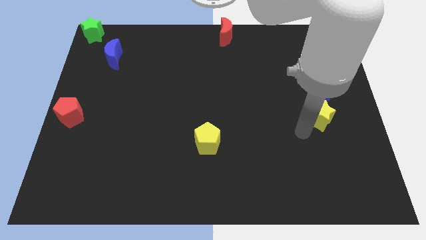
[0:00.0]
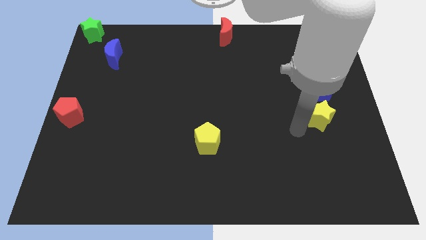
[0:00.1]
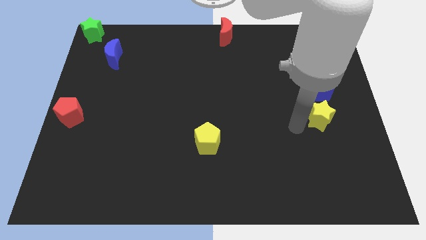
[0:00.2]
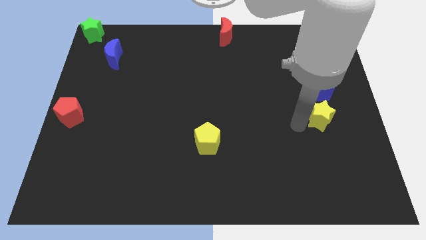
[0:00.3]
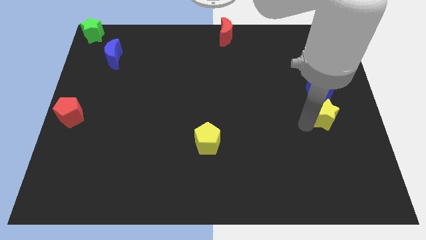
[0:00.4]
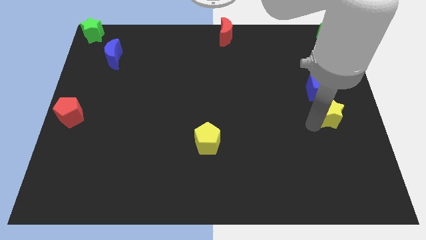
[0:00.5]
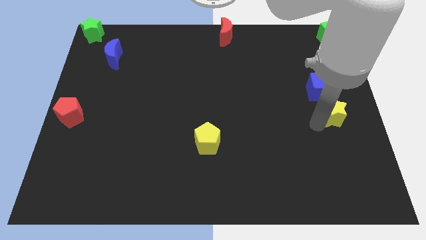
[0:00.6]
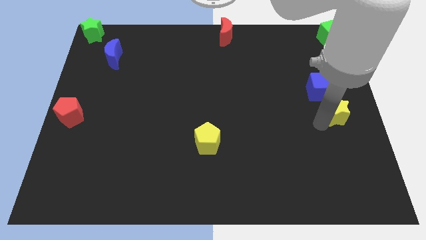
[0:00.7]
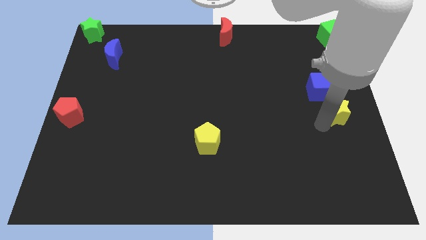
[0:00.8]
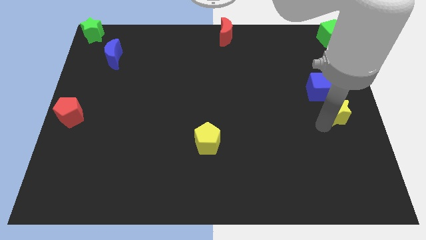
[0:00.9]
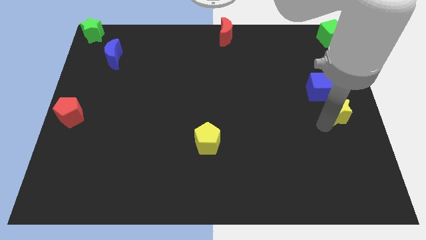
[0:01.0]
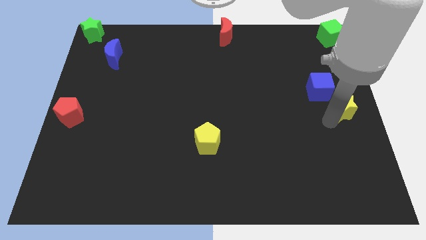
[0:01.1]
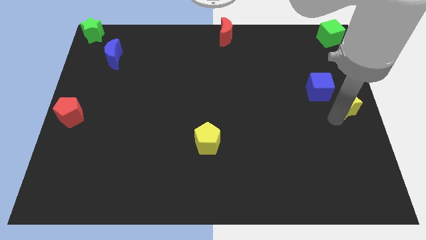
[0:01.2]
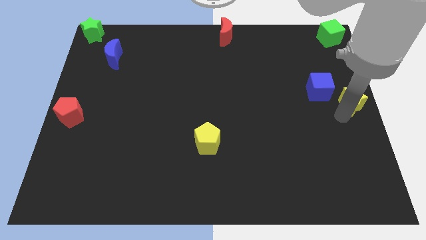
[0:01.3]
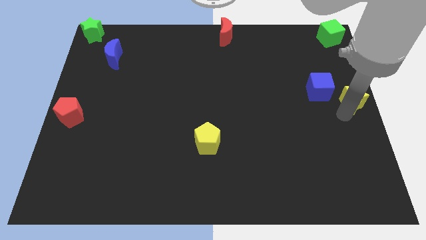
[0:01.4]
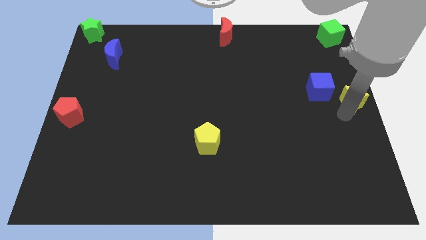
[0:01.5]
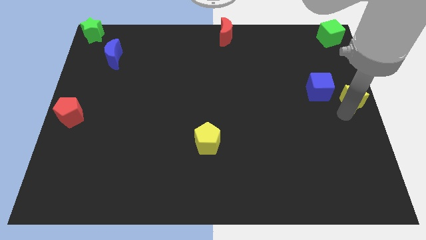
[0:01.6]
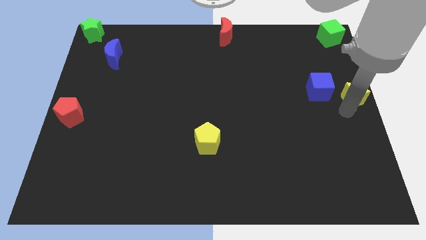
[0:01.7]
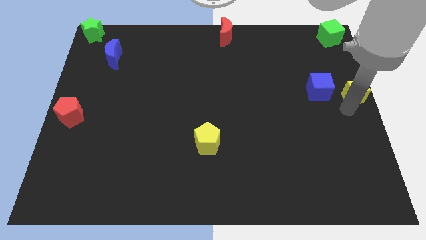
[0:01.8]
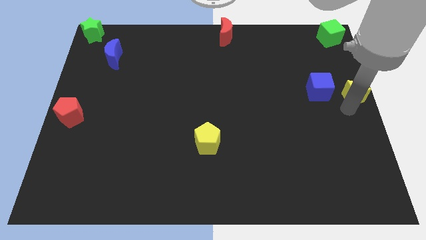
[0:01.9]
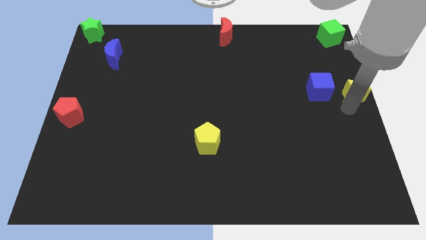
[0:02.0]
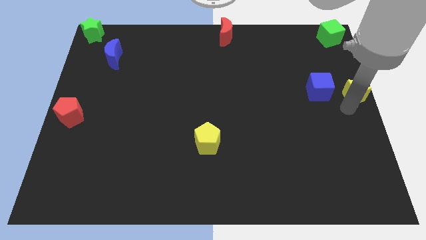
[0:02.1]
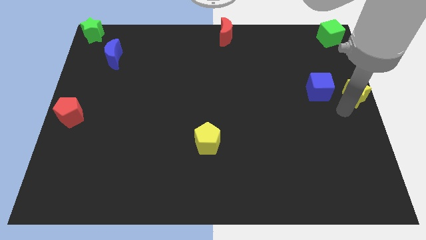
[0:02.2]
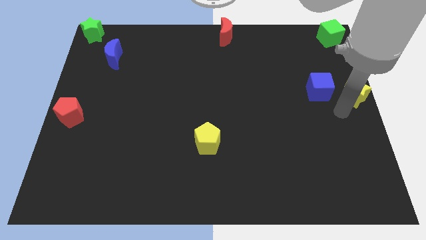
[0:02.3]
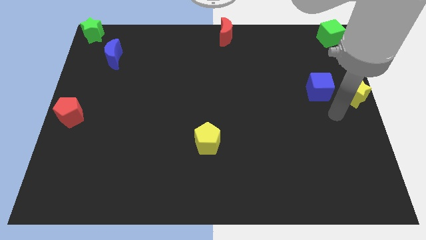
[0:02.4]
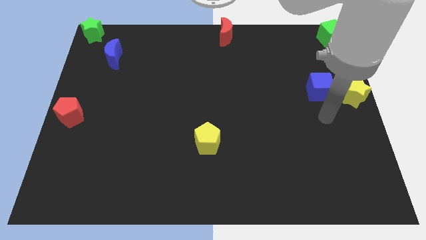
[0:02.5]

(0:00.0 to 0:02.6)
push the yellow star to the center right

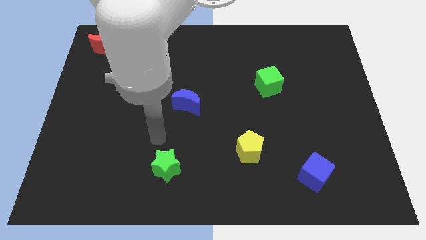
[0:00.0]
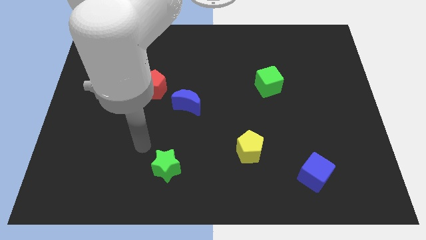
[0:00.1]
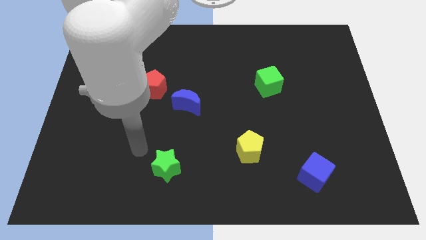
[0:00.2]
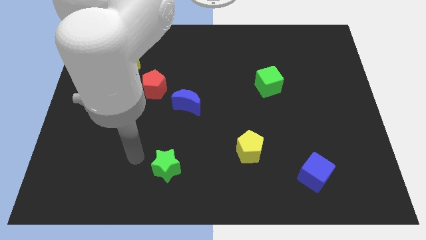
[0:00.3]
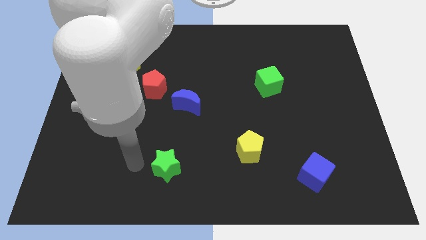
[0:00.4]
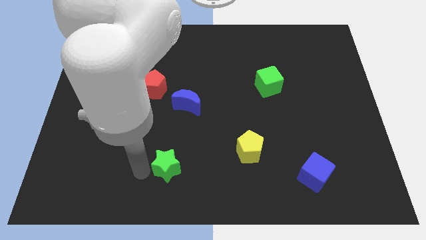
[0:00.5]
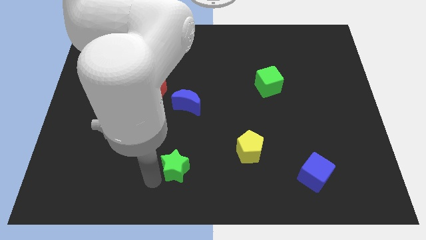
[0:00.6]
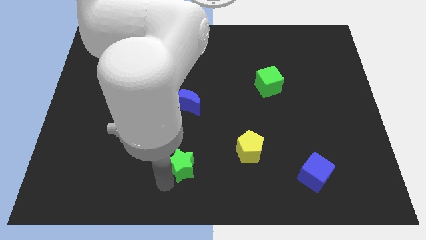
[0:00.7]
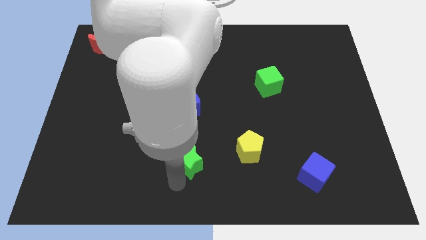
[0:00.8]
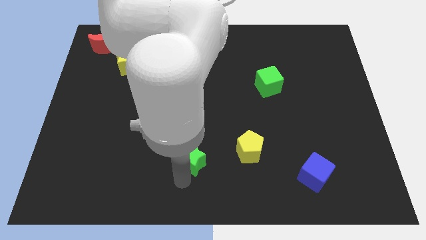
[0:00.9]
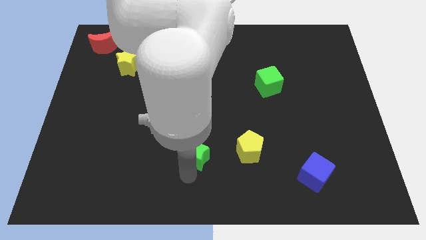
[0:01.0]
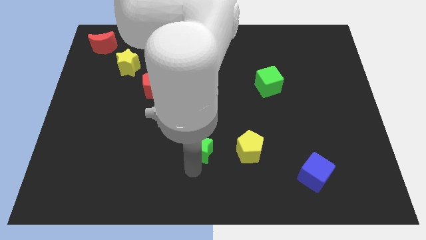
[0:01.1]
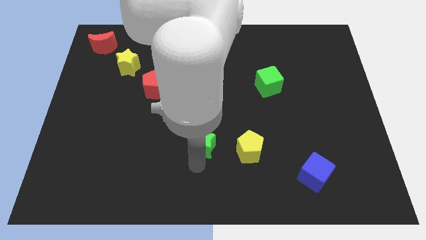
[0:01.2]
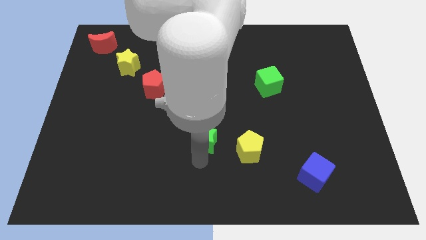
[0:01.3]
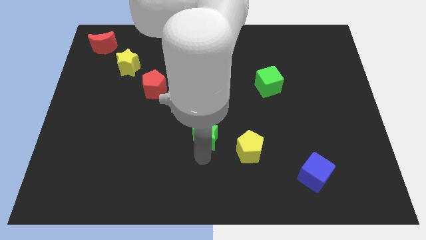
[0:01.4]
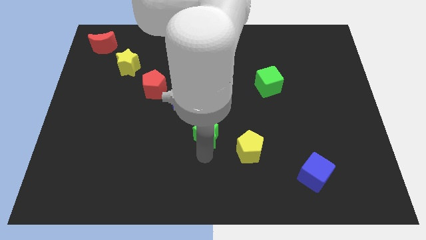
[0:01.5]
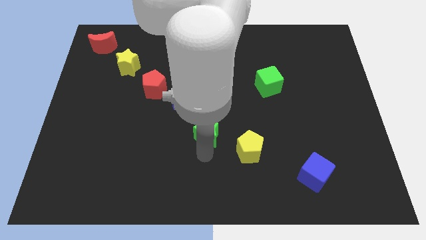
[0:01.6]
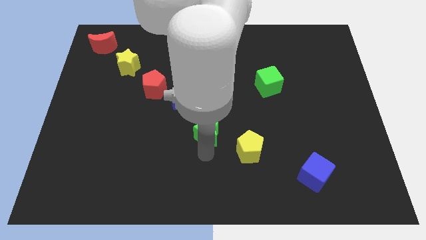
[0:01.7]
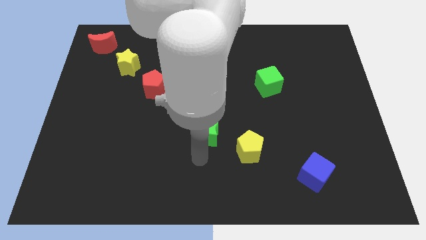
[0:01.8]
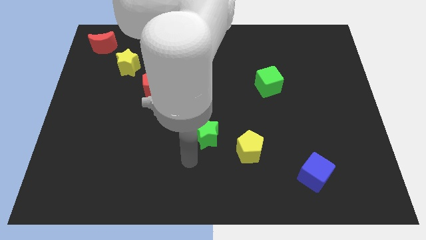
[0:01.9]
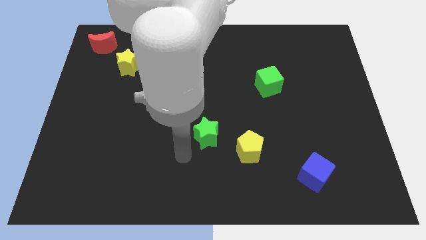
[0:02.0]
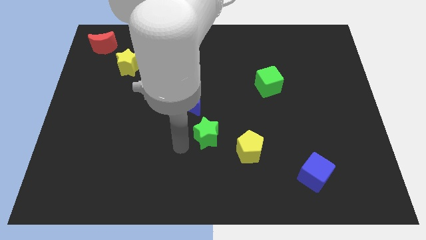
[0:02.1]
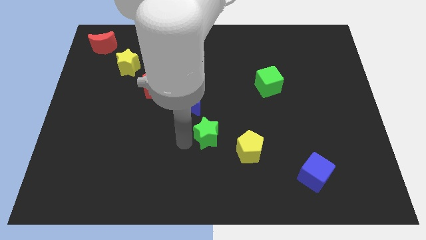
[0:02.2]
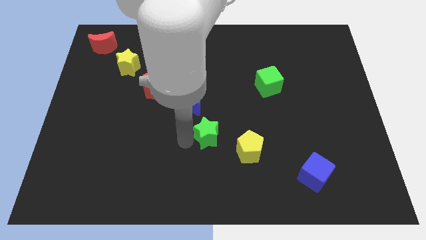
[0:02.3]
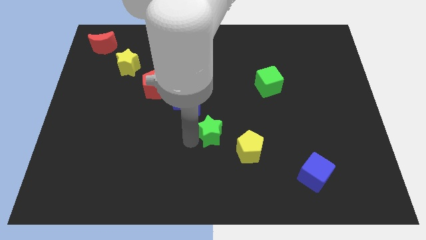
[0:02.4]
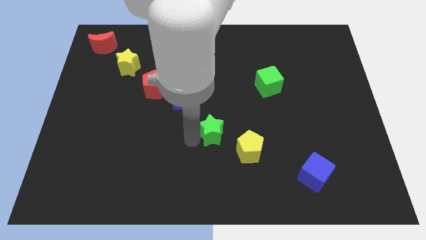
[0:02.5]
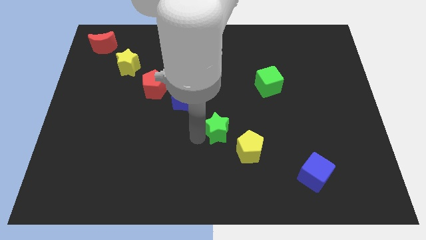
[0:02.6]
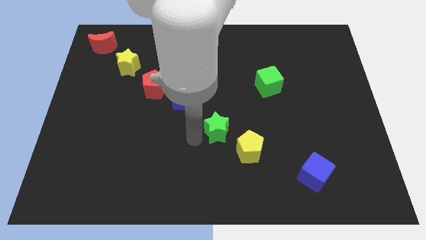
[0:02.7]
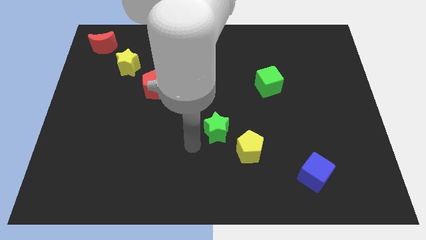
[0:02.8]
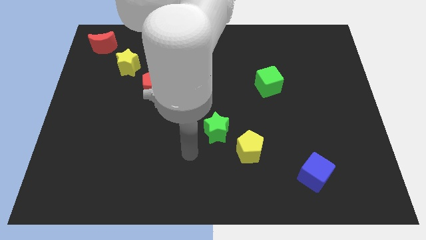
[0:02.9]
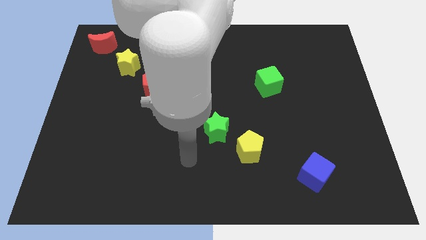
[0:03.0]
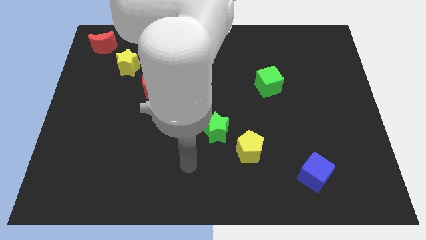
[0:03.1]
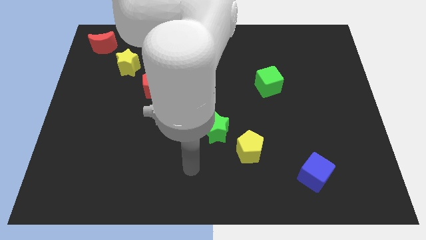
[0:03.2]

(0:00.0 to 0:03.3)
place the green star in between the yellow pentagon and the blue crescent

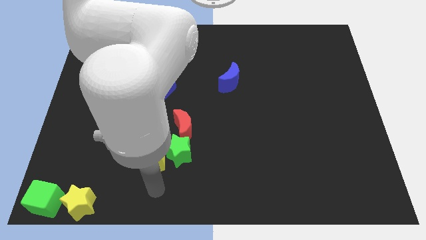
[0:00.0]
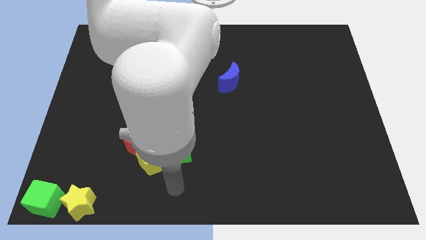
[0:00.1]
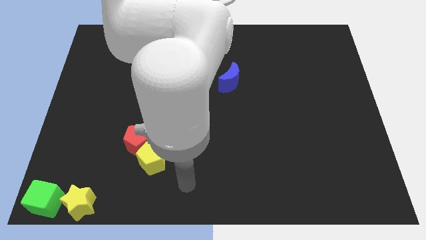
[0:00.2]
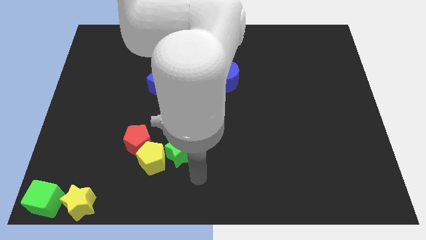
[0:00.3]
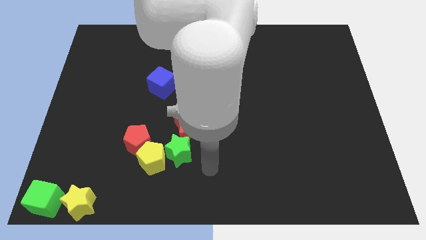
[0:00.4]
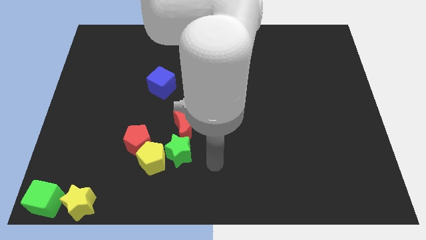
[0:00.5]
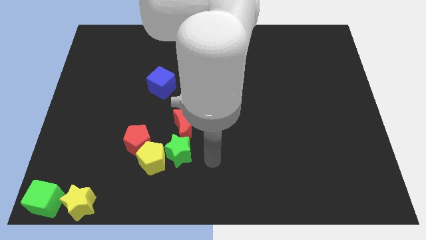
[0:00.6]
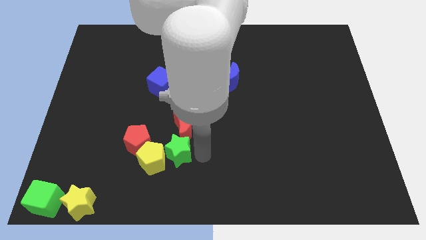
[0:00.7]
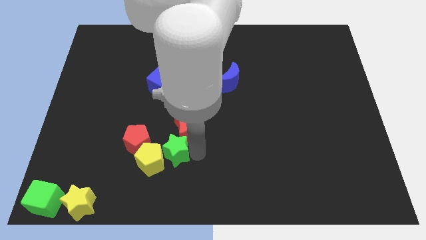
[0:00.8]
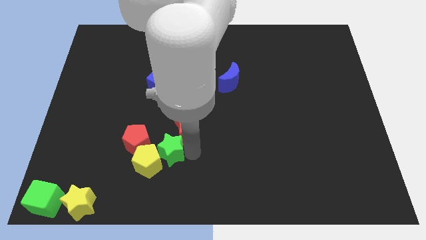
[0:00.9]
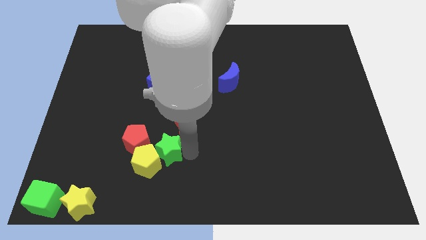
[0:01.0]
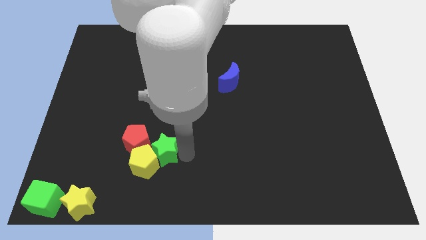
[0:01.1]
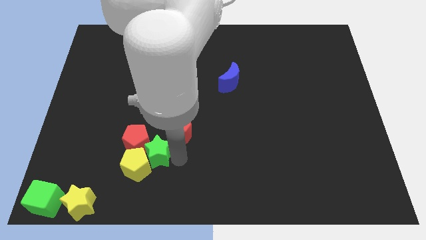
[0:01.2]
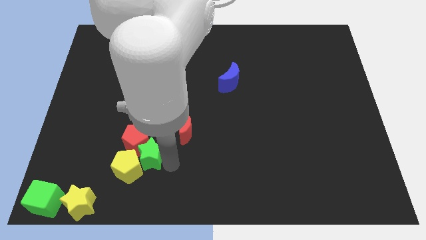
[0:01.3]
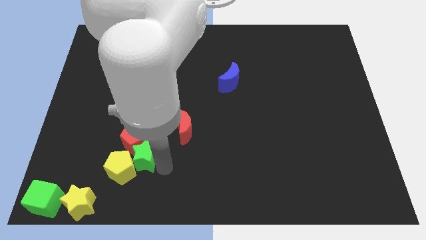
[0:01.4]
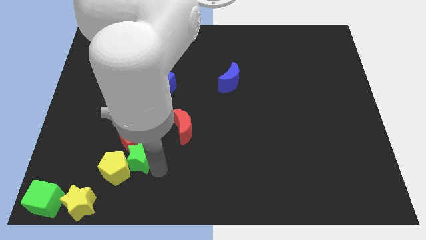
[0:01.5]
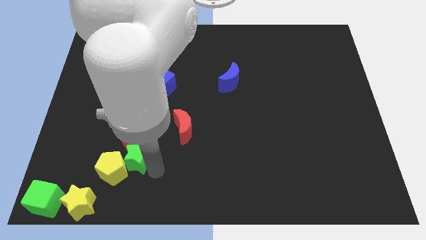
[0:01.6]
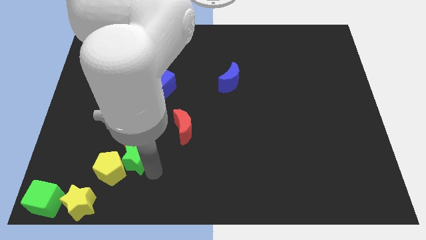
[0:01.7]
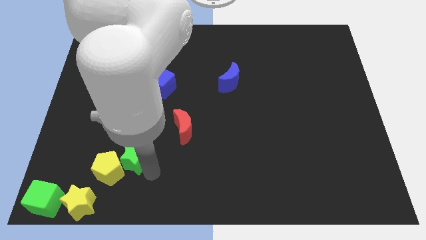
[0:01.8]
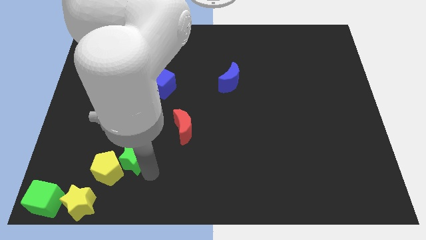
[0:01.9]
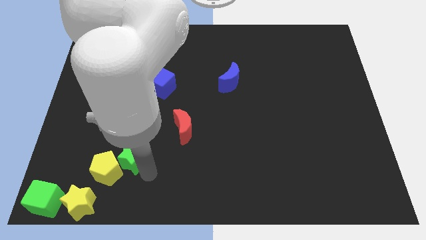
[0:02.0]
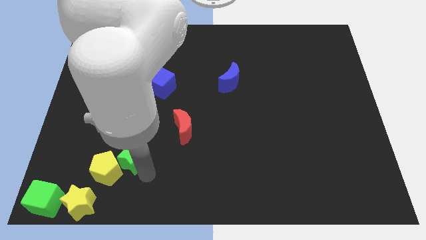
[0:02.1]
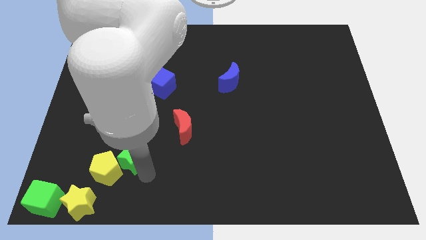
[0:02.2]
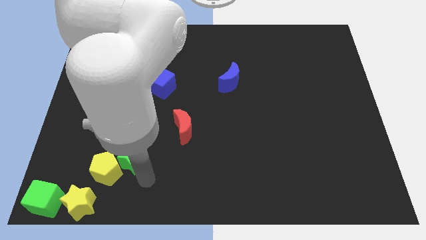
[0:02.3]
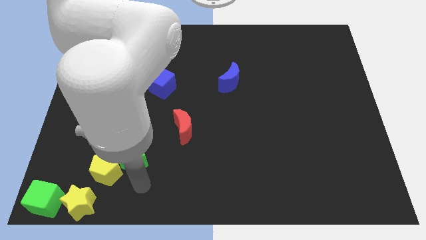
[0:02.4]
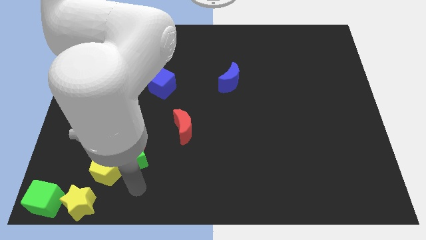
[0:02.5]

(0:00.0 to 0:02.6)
push the green star and yellow pentagon to the bottom of red pentagon

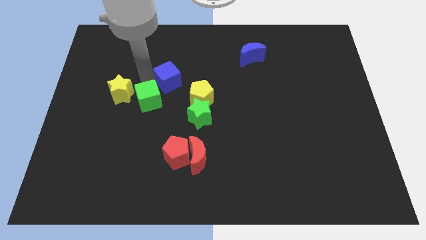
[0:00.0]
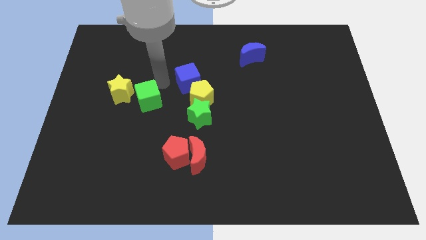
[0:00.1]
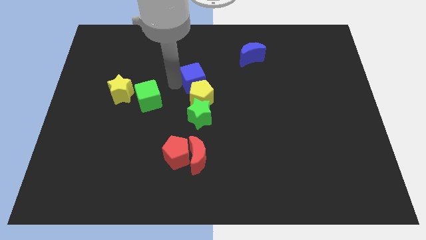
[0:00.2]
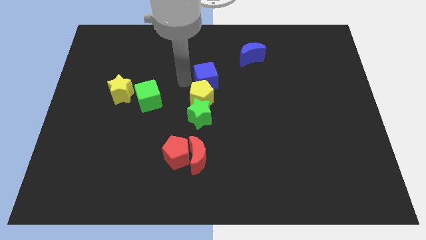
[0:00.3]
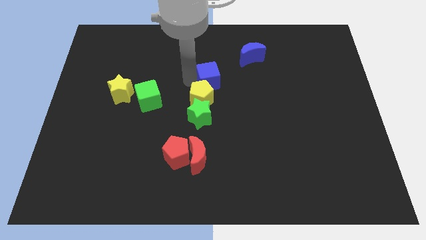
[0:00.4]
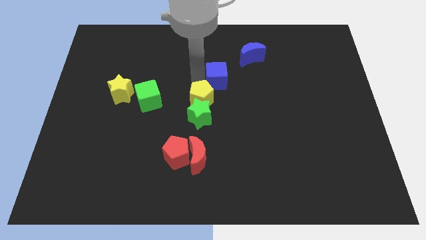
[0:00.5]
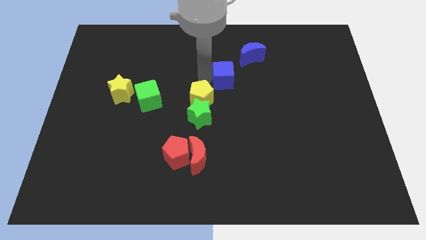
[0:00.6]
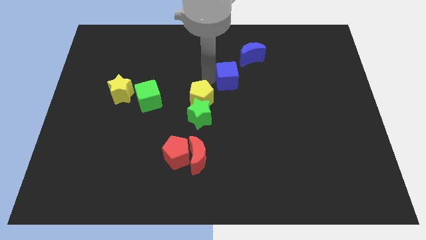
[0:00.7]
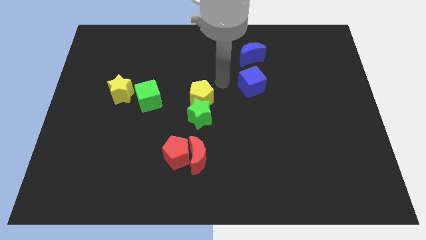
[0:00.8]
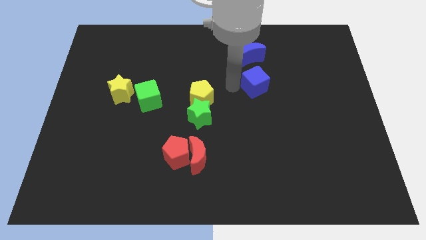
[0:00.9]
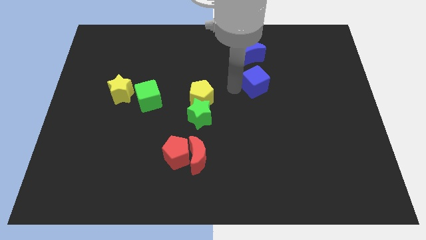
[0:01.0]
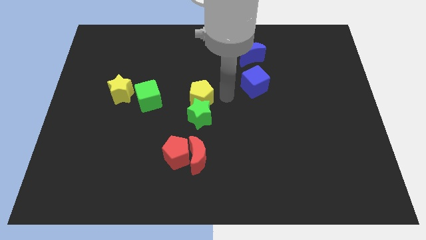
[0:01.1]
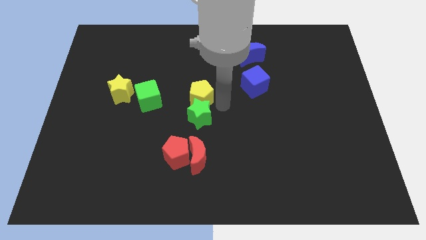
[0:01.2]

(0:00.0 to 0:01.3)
push the blue cube to the bottom of the blue half moon
